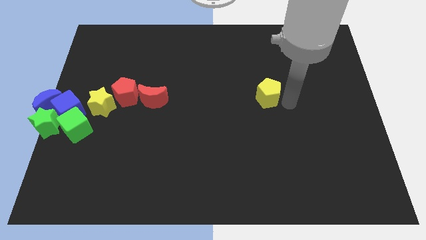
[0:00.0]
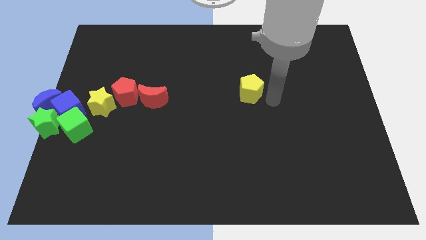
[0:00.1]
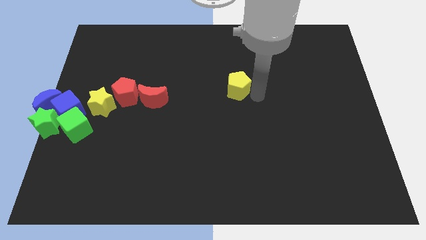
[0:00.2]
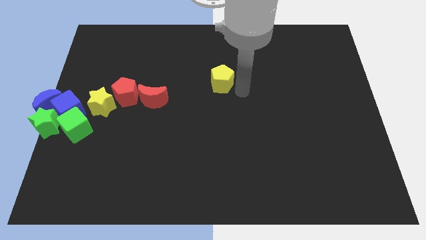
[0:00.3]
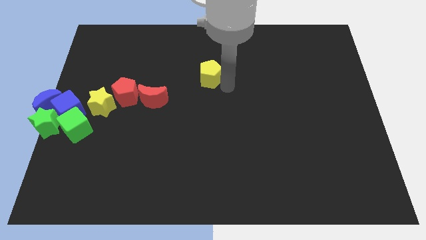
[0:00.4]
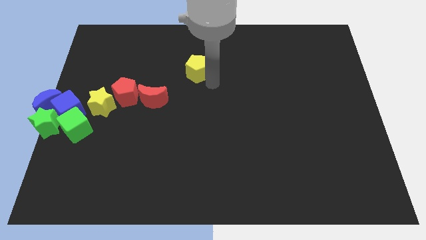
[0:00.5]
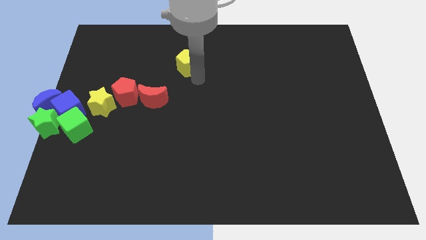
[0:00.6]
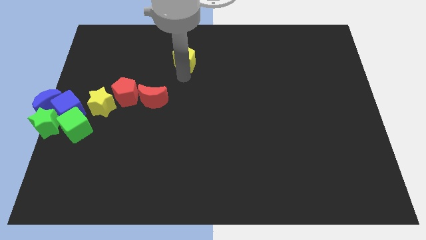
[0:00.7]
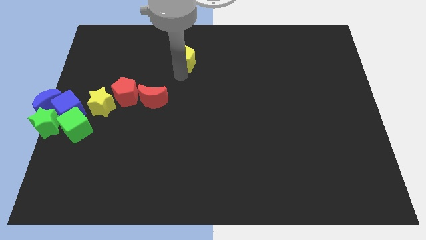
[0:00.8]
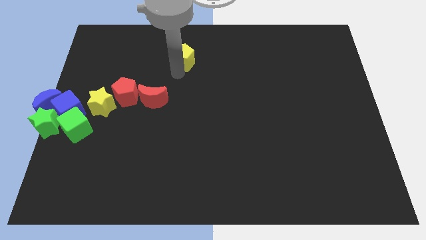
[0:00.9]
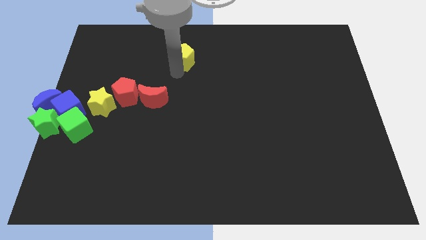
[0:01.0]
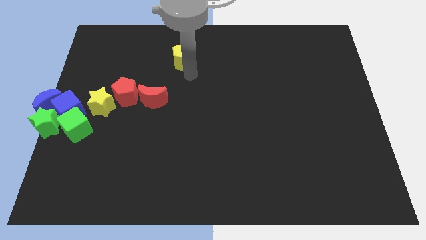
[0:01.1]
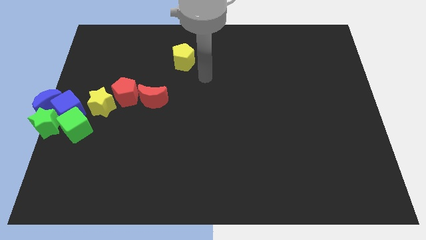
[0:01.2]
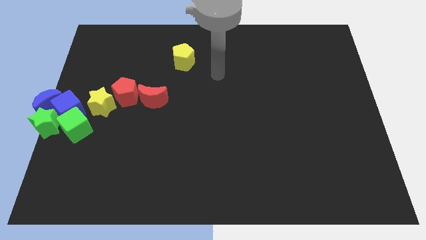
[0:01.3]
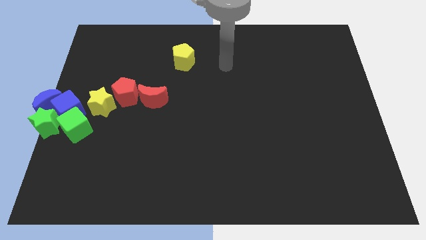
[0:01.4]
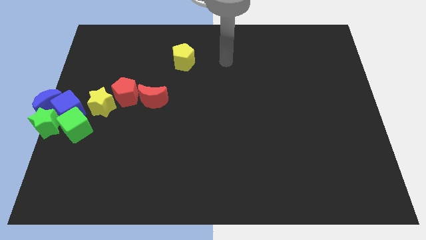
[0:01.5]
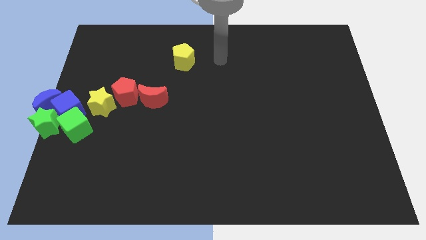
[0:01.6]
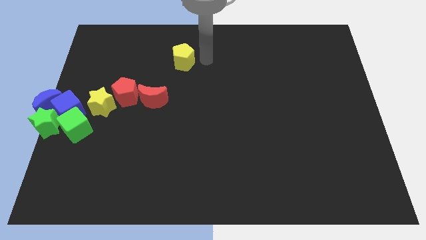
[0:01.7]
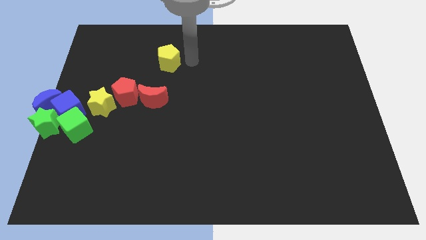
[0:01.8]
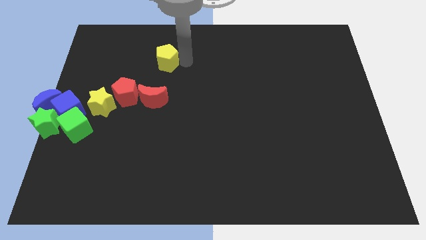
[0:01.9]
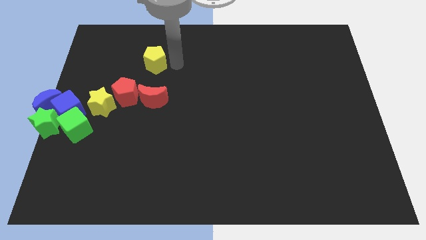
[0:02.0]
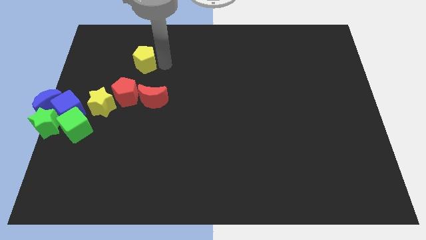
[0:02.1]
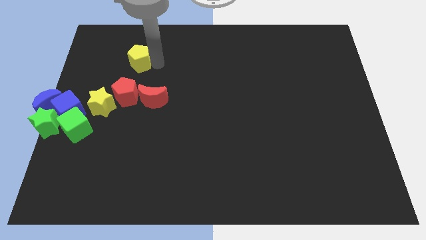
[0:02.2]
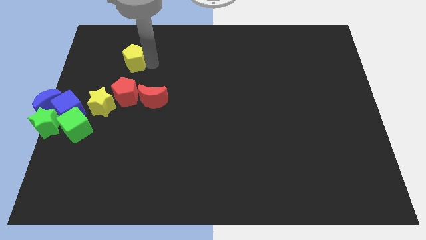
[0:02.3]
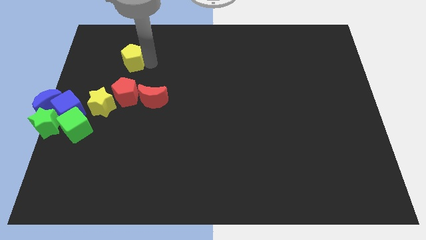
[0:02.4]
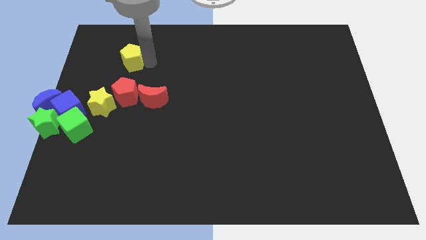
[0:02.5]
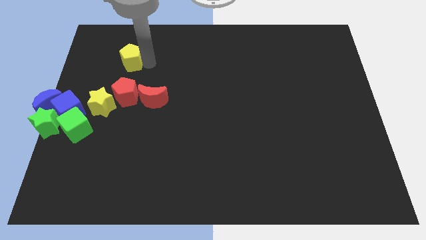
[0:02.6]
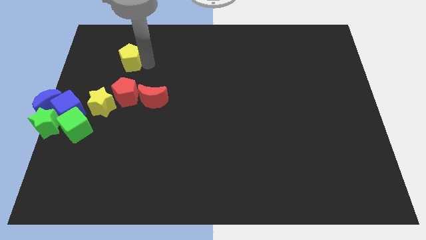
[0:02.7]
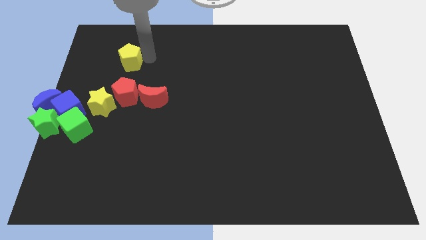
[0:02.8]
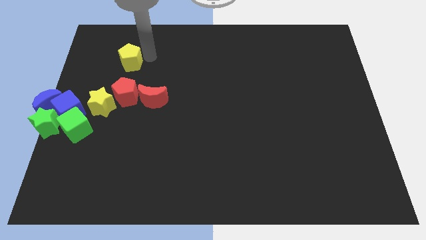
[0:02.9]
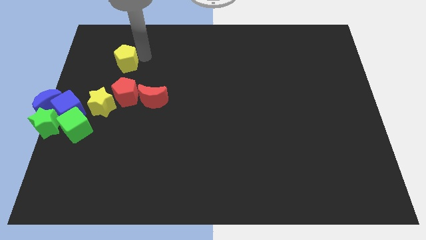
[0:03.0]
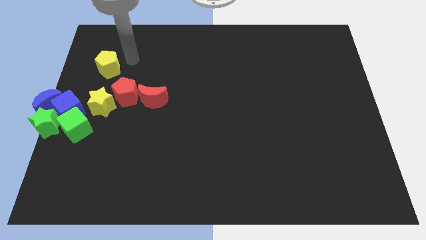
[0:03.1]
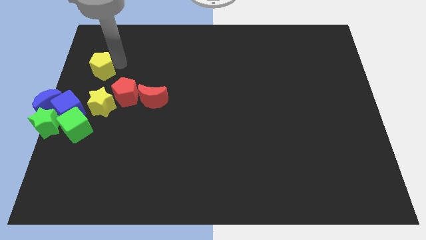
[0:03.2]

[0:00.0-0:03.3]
put the yellow pentagon vertically above the yellow star

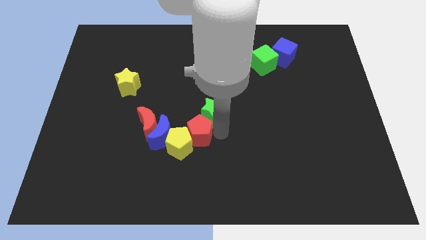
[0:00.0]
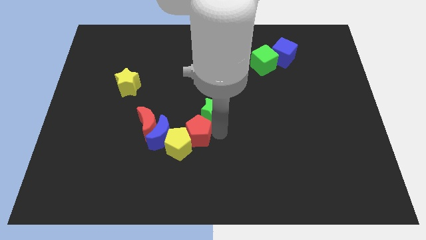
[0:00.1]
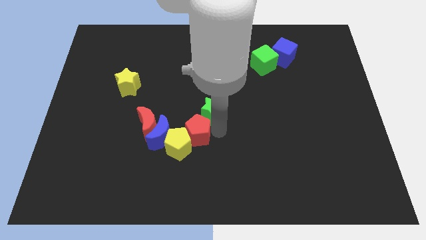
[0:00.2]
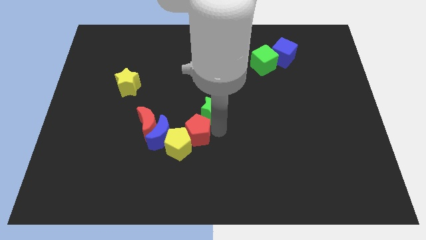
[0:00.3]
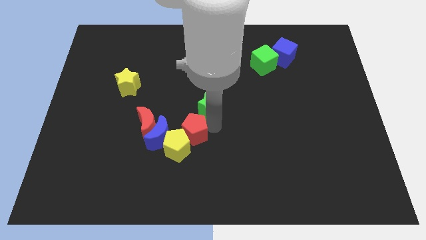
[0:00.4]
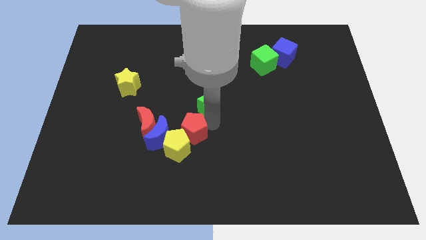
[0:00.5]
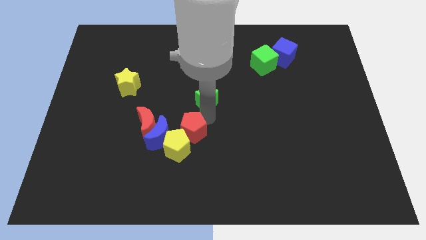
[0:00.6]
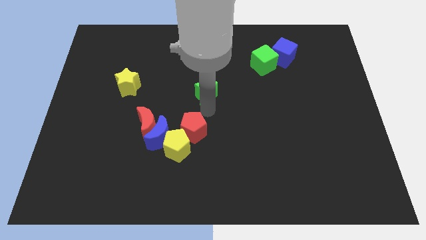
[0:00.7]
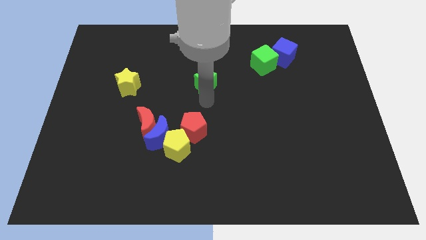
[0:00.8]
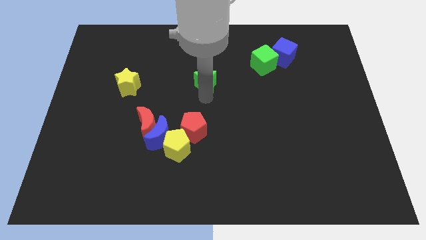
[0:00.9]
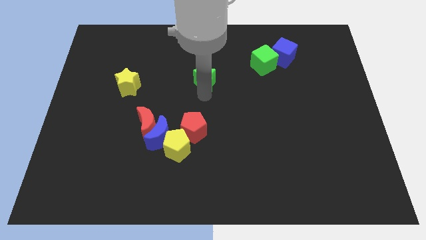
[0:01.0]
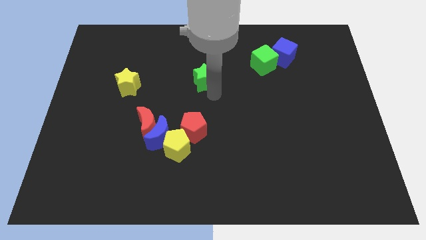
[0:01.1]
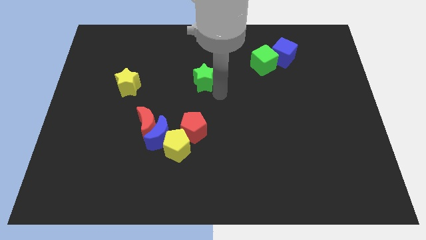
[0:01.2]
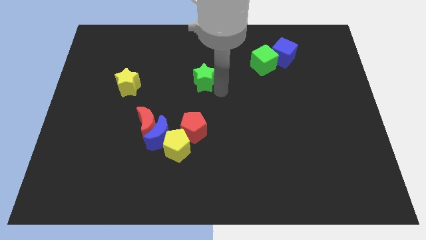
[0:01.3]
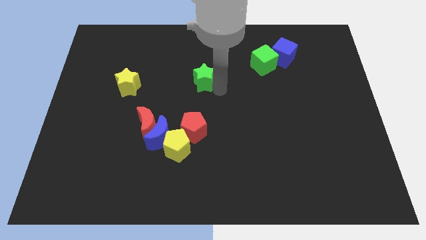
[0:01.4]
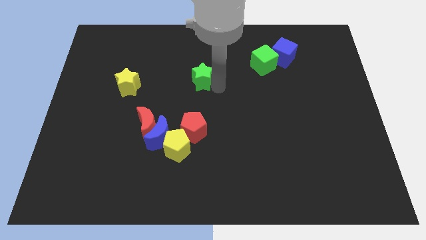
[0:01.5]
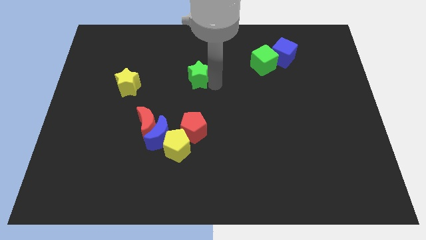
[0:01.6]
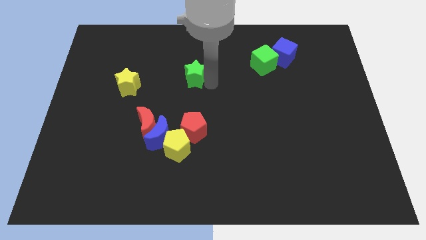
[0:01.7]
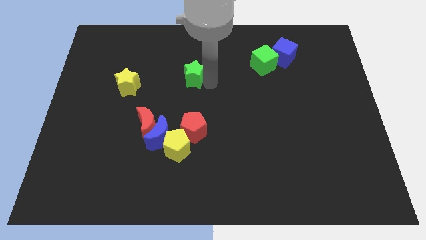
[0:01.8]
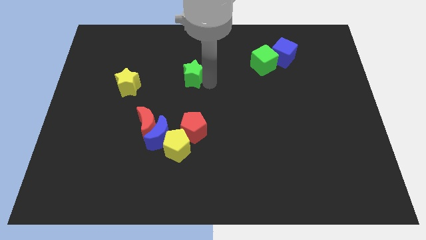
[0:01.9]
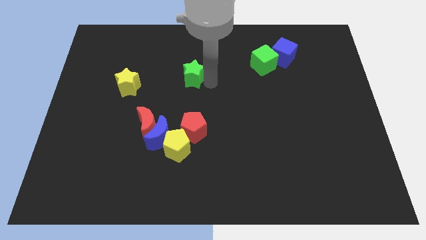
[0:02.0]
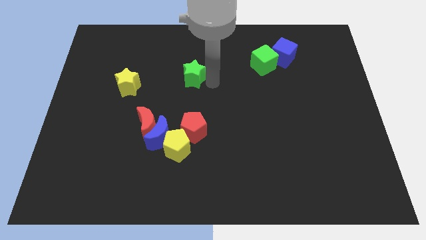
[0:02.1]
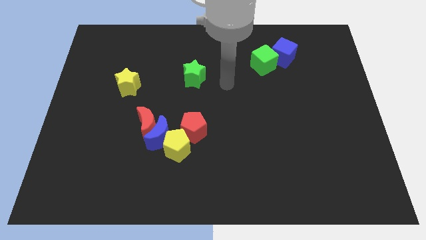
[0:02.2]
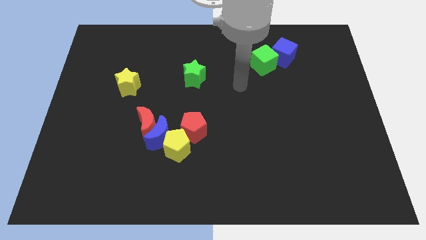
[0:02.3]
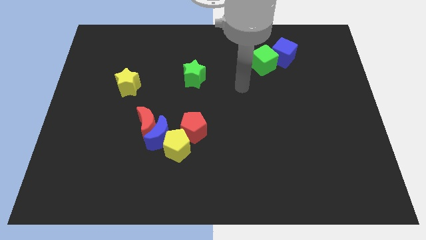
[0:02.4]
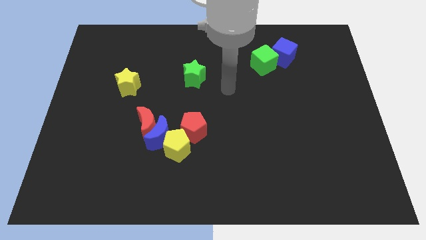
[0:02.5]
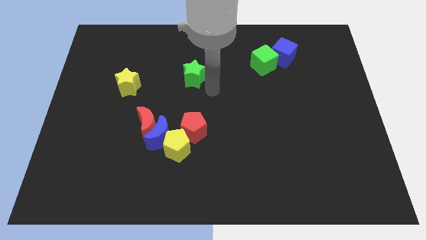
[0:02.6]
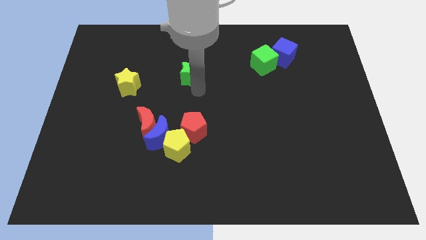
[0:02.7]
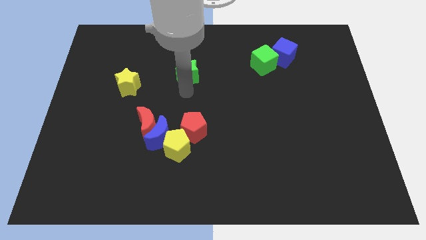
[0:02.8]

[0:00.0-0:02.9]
place the green star in between the green cube and yellow star

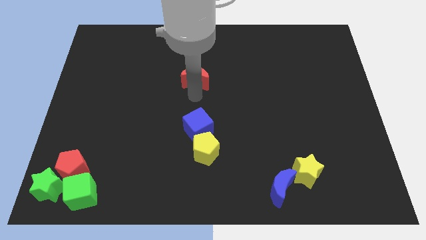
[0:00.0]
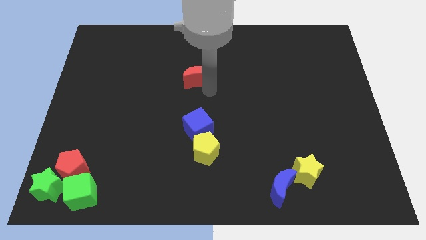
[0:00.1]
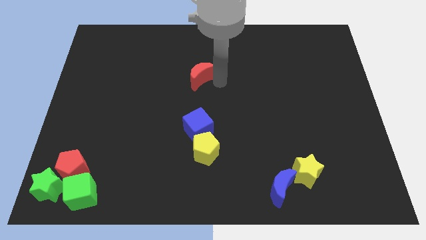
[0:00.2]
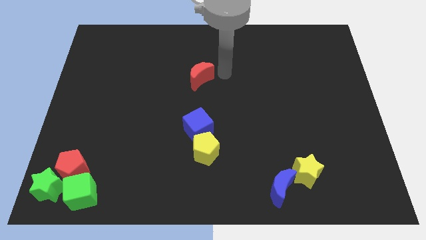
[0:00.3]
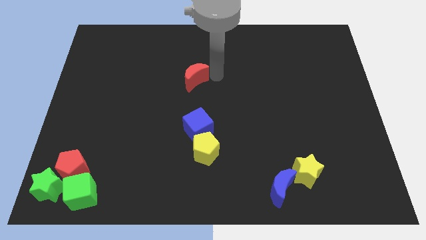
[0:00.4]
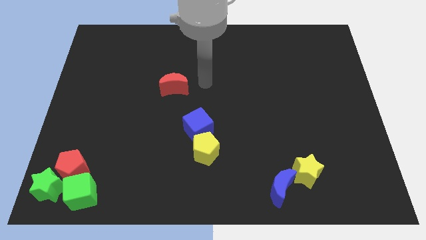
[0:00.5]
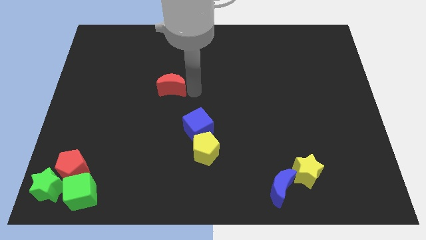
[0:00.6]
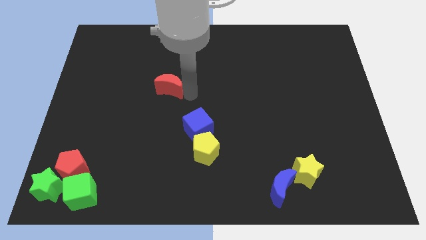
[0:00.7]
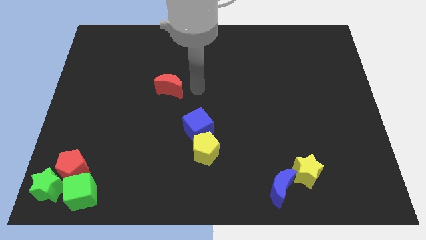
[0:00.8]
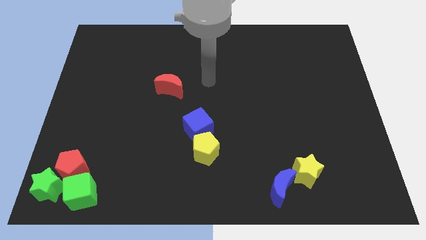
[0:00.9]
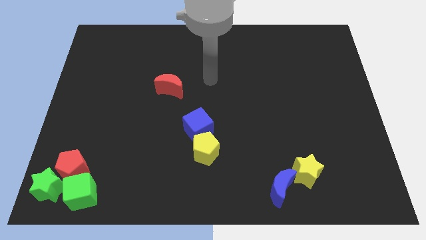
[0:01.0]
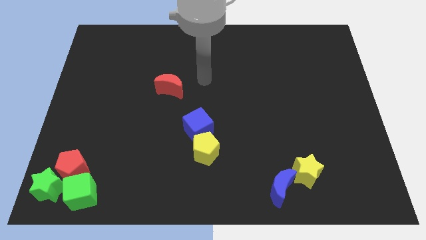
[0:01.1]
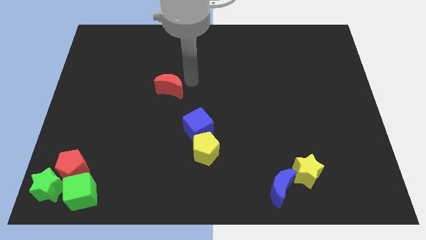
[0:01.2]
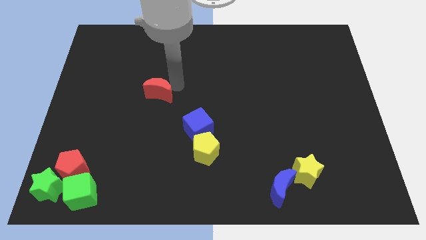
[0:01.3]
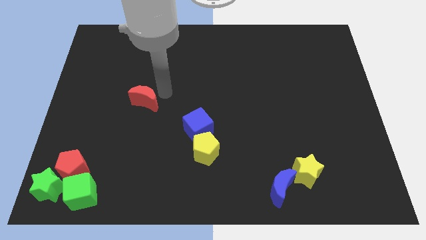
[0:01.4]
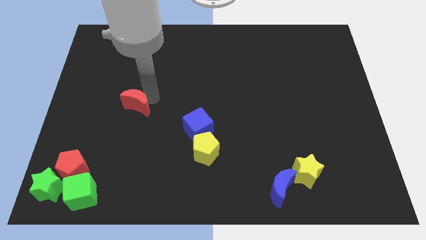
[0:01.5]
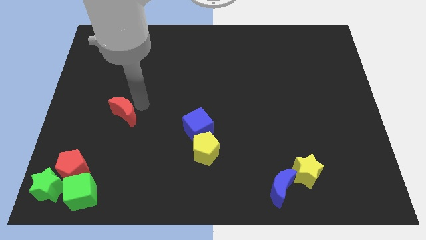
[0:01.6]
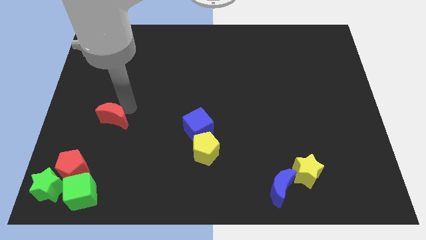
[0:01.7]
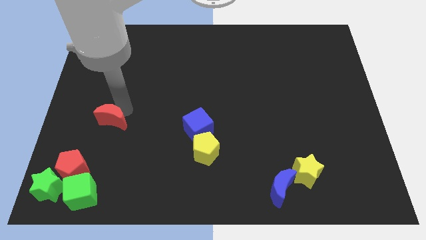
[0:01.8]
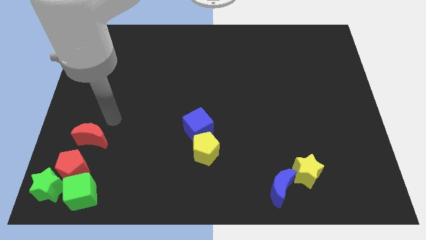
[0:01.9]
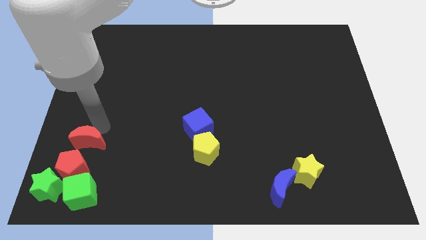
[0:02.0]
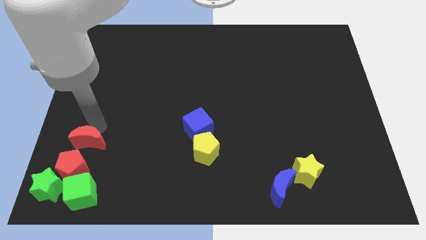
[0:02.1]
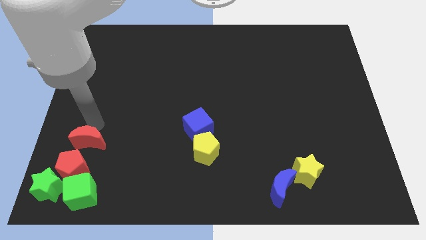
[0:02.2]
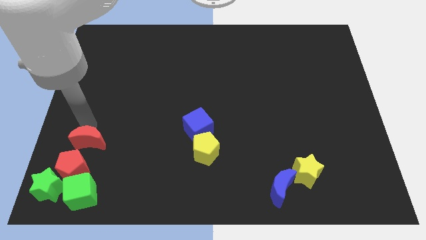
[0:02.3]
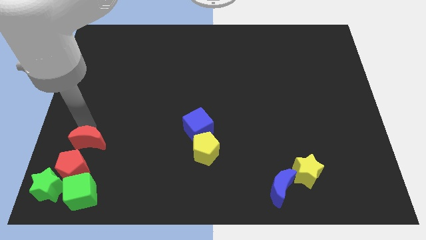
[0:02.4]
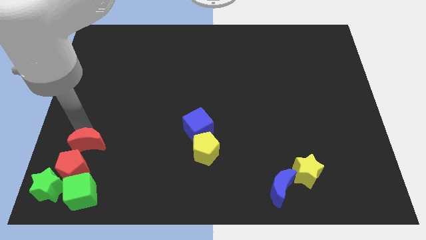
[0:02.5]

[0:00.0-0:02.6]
push the red crescent towards the red pentagon
